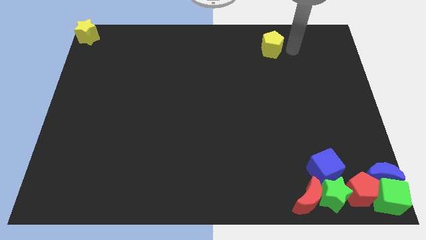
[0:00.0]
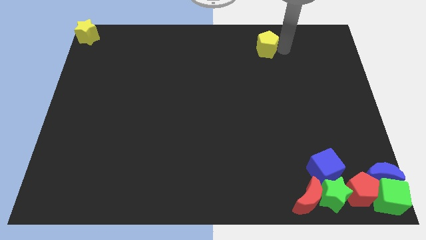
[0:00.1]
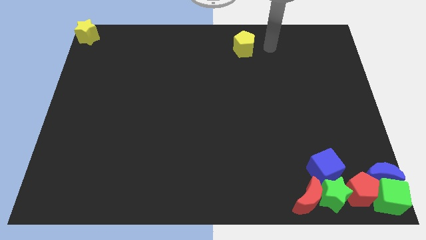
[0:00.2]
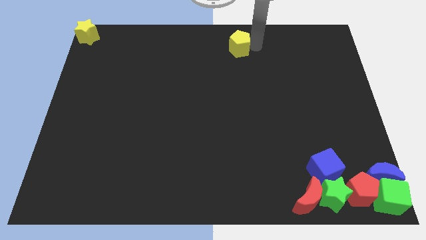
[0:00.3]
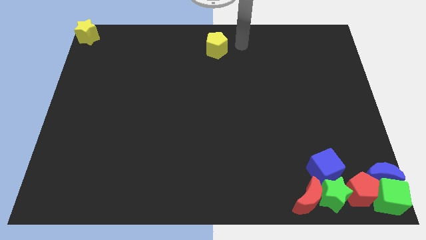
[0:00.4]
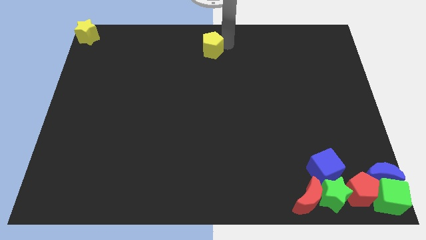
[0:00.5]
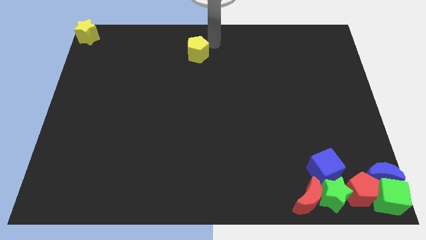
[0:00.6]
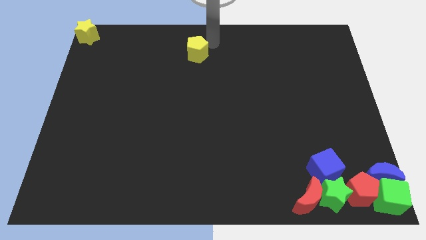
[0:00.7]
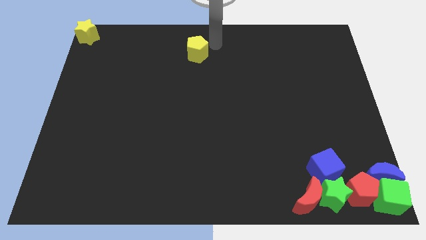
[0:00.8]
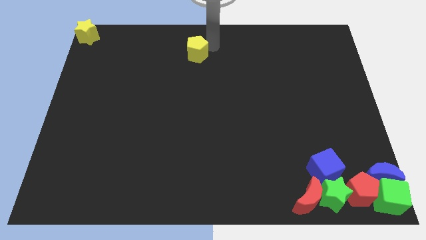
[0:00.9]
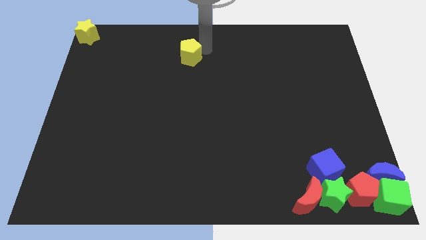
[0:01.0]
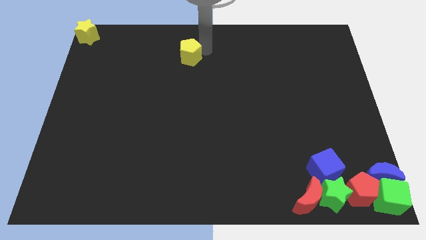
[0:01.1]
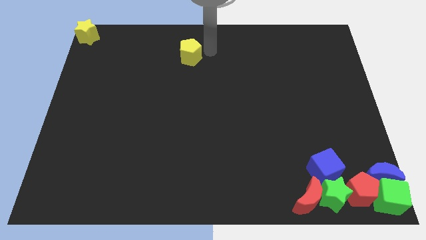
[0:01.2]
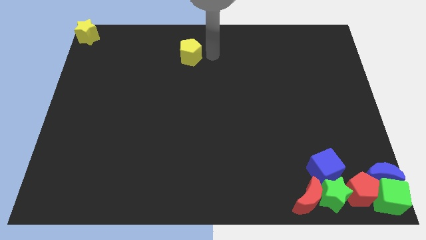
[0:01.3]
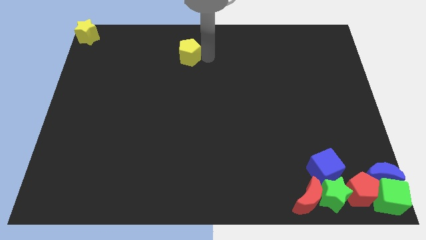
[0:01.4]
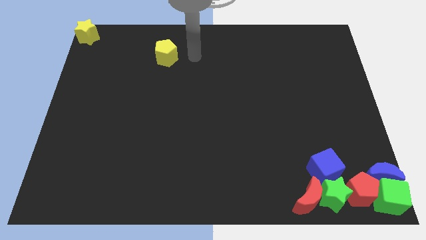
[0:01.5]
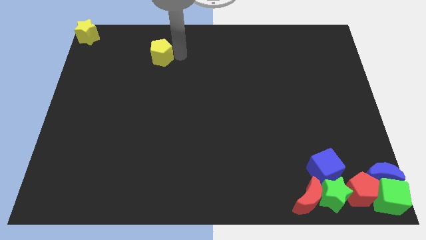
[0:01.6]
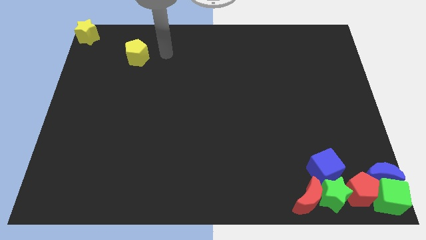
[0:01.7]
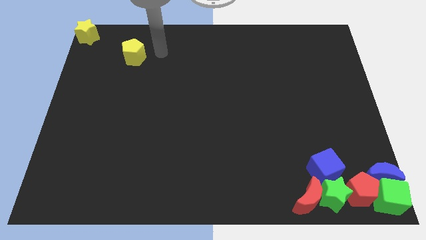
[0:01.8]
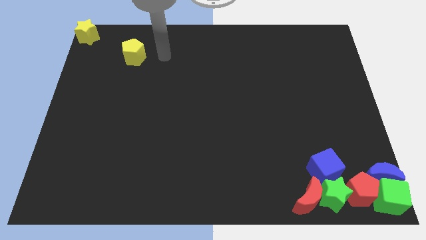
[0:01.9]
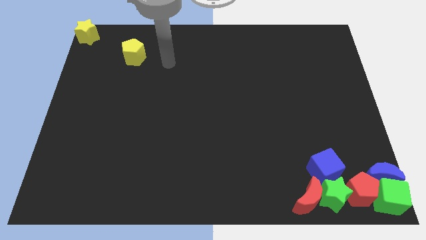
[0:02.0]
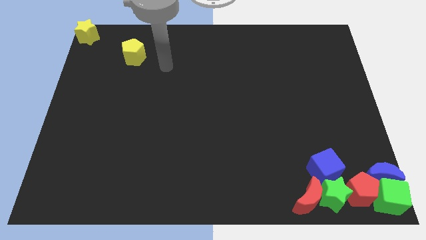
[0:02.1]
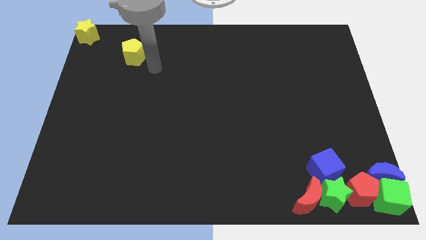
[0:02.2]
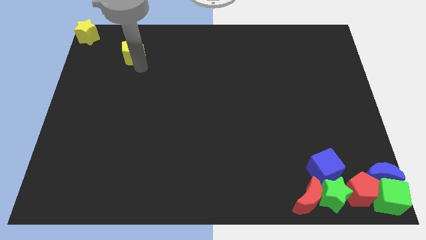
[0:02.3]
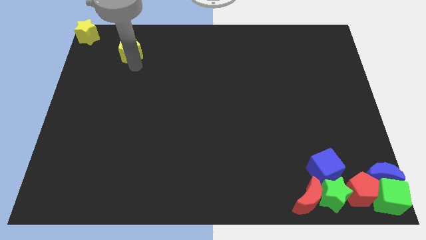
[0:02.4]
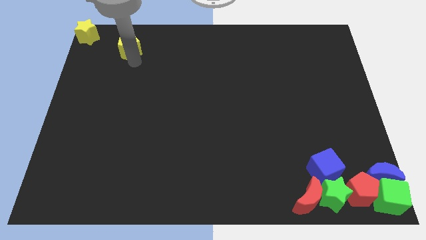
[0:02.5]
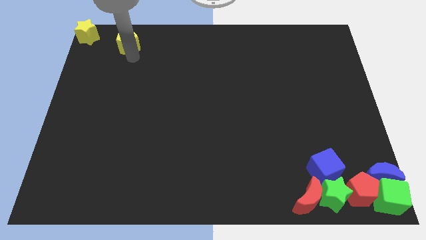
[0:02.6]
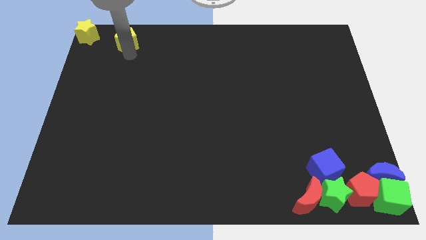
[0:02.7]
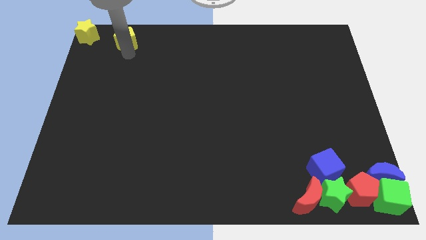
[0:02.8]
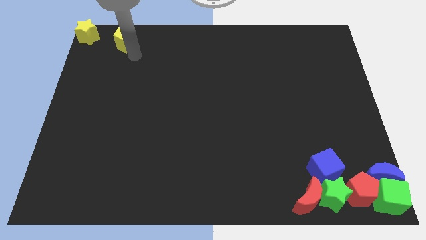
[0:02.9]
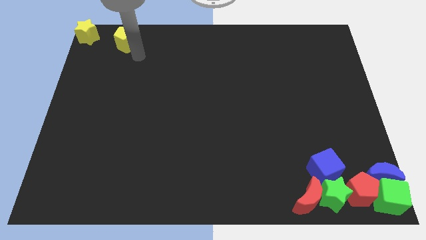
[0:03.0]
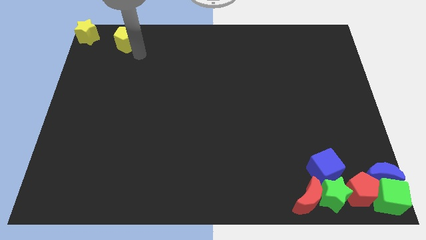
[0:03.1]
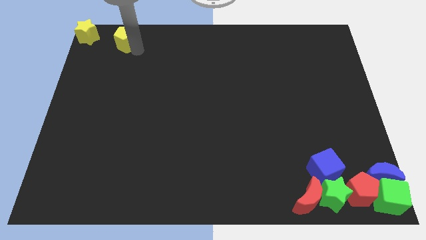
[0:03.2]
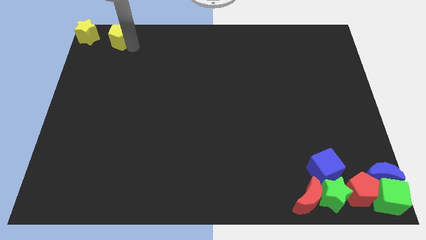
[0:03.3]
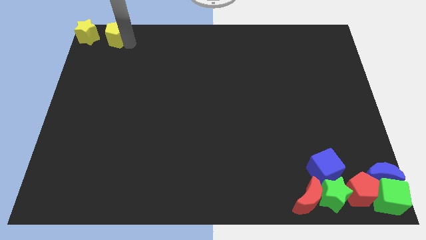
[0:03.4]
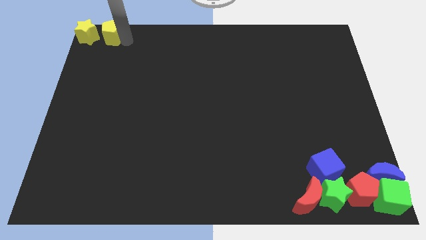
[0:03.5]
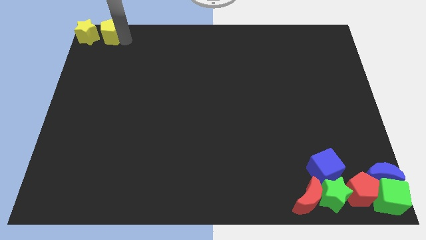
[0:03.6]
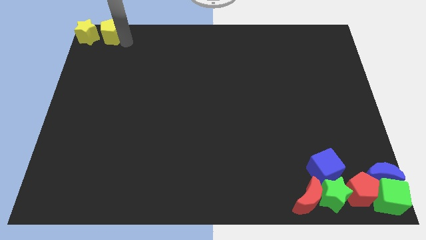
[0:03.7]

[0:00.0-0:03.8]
push the yellow pentagon to the right side of the yellow star

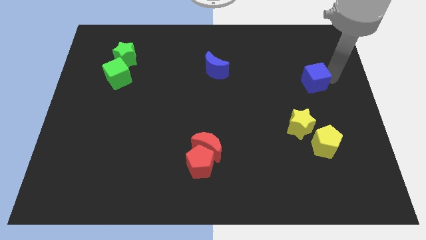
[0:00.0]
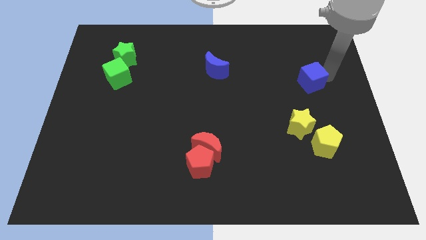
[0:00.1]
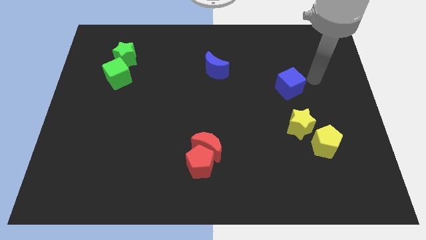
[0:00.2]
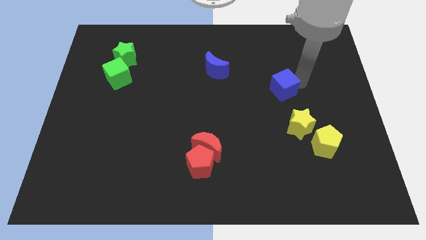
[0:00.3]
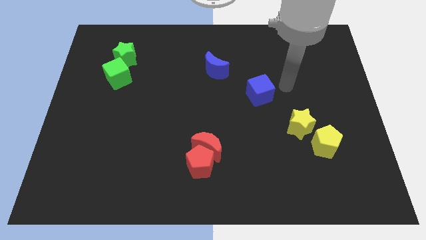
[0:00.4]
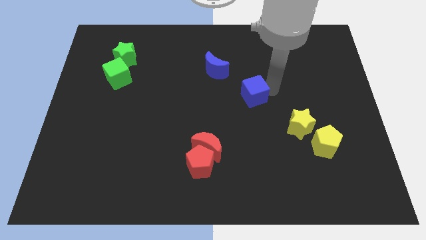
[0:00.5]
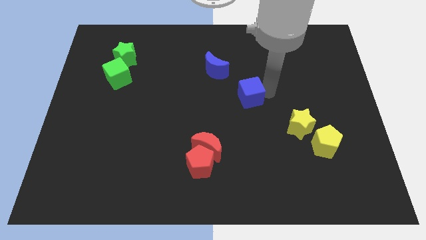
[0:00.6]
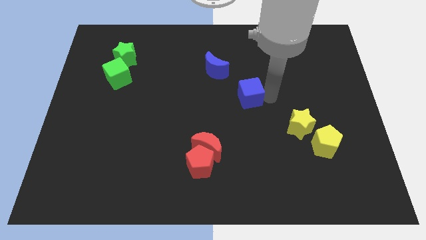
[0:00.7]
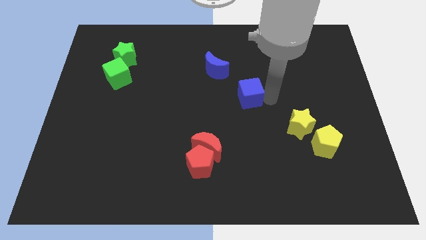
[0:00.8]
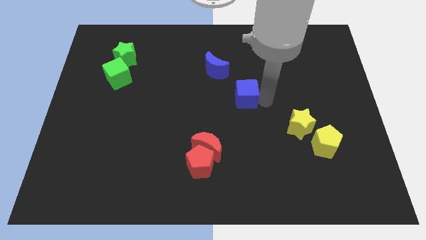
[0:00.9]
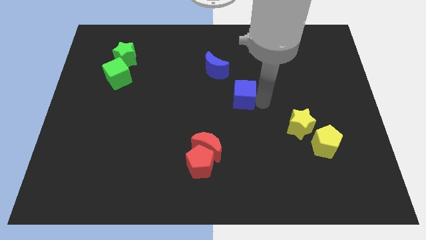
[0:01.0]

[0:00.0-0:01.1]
drag the blue cube slightly to the left

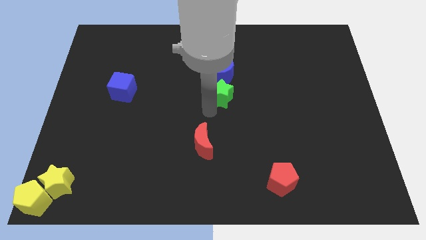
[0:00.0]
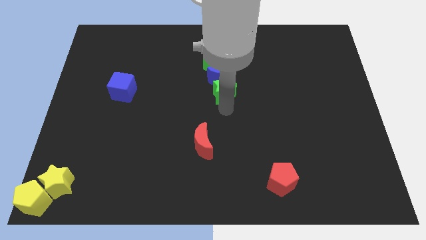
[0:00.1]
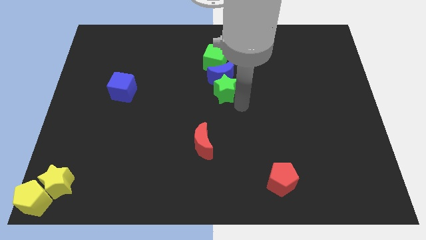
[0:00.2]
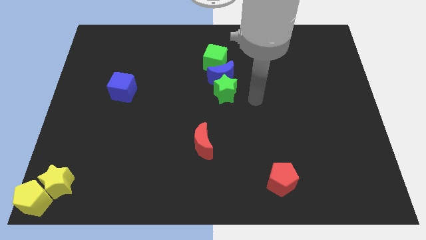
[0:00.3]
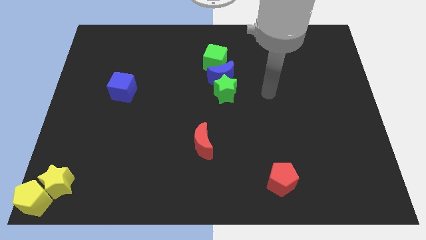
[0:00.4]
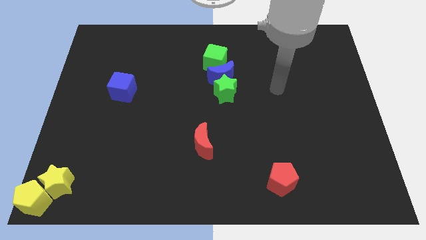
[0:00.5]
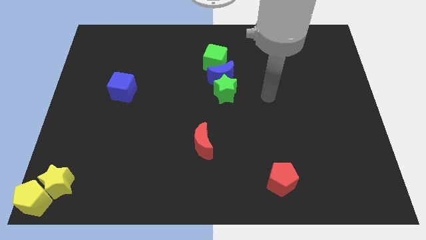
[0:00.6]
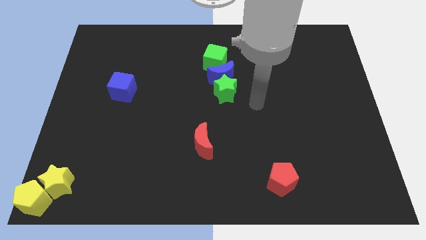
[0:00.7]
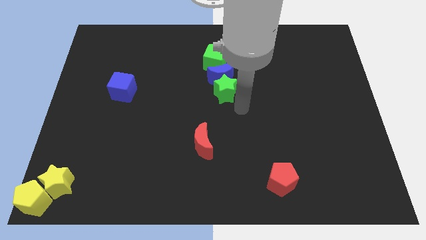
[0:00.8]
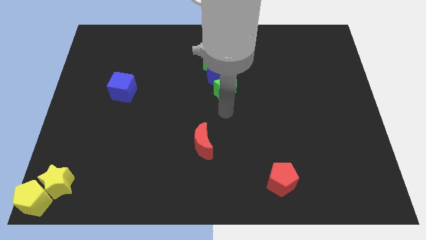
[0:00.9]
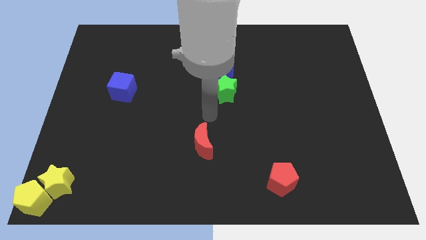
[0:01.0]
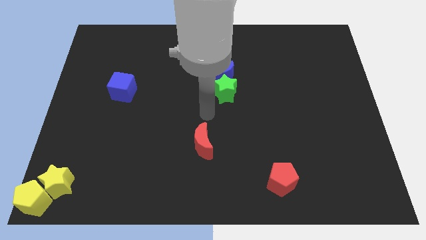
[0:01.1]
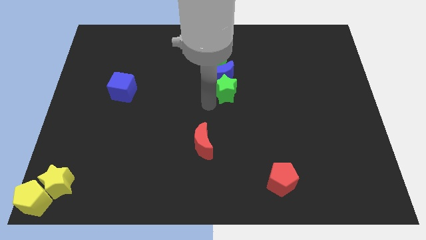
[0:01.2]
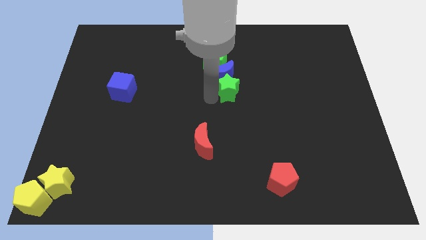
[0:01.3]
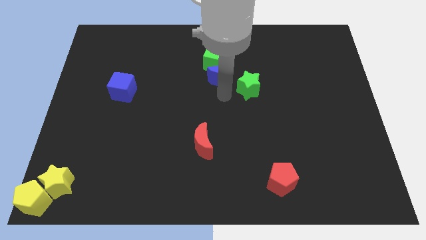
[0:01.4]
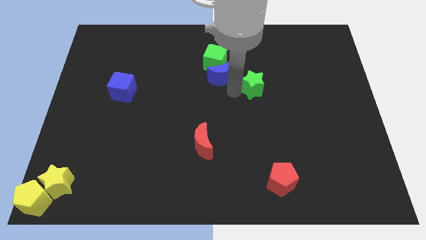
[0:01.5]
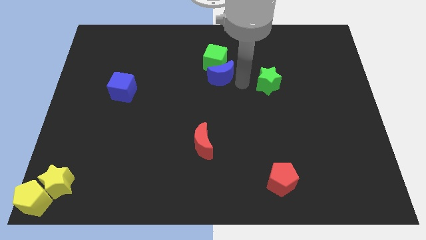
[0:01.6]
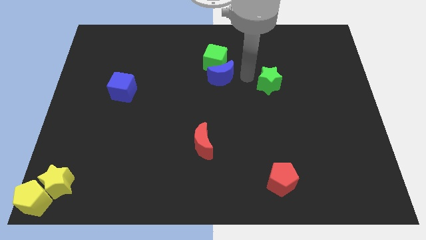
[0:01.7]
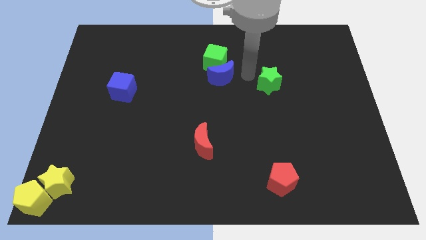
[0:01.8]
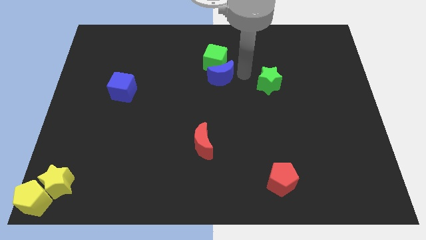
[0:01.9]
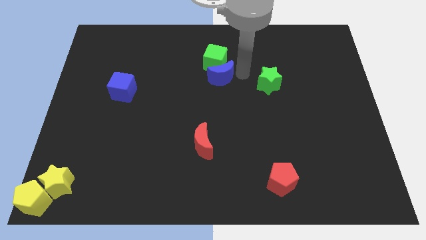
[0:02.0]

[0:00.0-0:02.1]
place the green star to the right of the blue moon

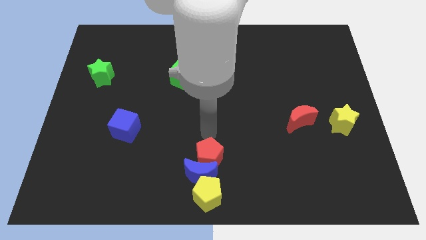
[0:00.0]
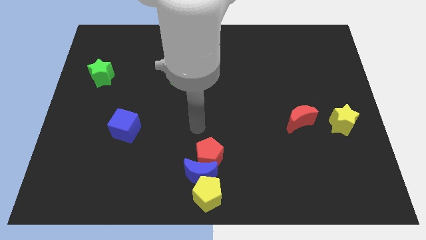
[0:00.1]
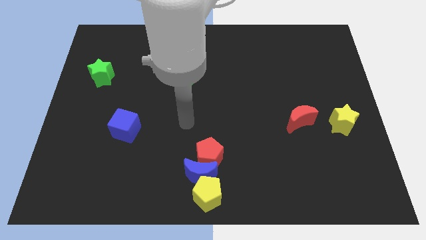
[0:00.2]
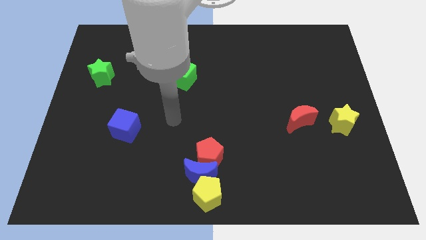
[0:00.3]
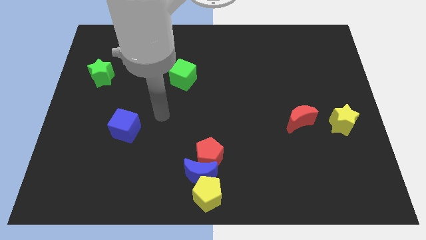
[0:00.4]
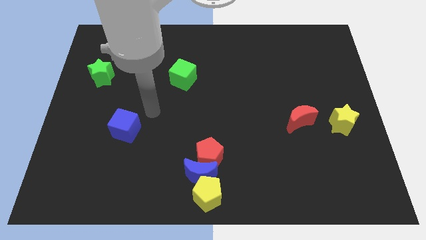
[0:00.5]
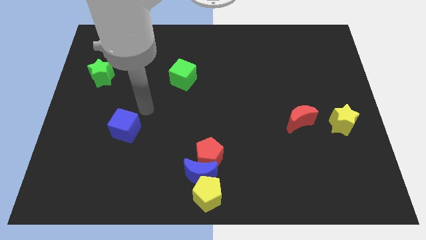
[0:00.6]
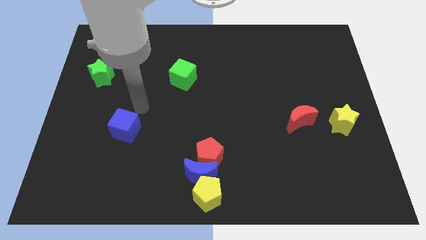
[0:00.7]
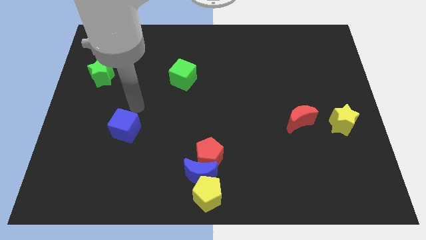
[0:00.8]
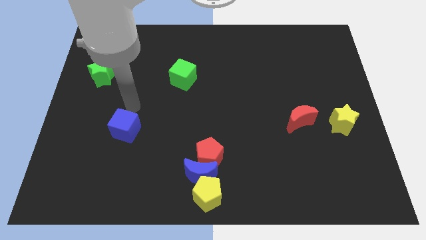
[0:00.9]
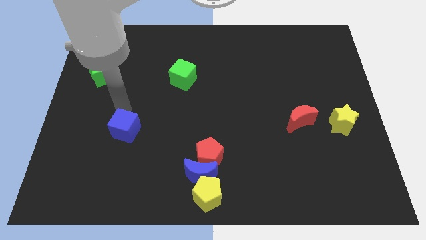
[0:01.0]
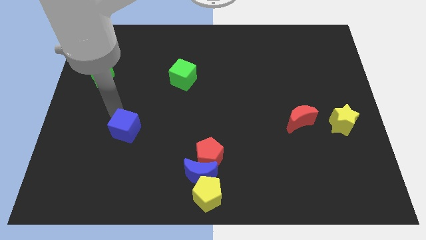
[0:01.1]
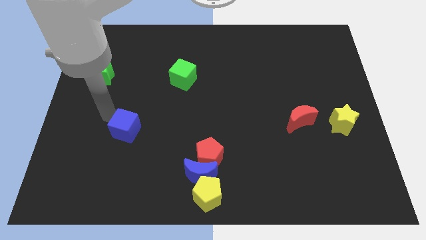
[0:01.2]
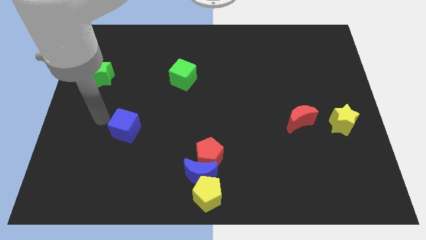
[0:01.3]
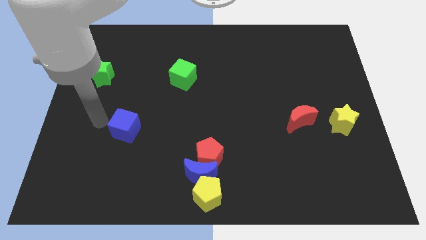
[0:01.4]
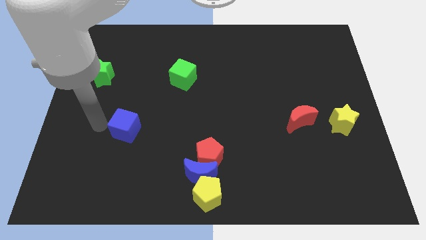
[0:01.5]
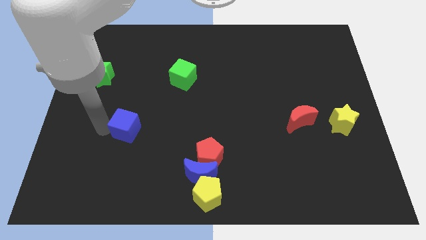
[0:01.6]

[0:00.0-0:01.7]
move your arm to the left of blue crescent

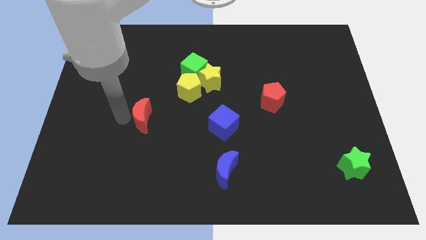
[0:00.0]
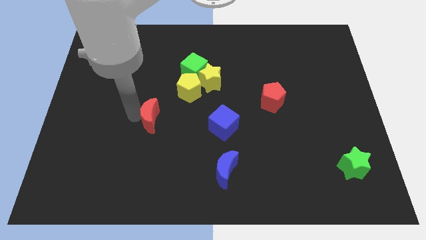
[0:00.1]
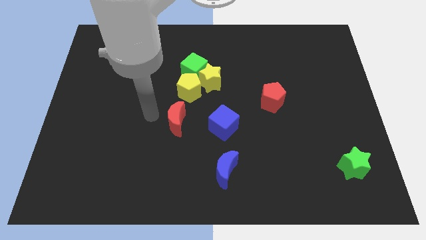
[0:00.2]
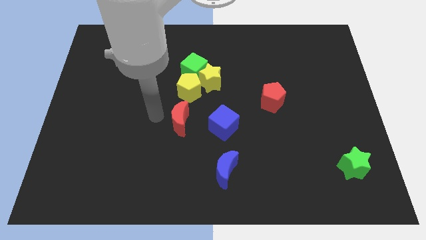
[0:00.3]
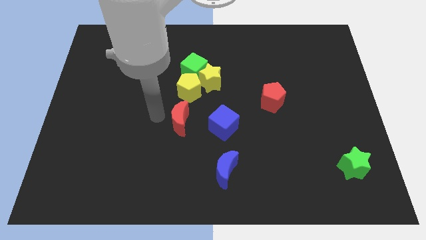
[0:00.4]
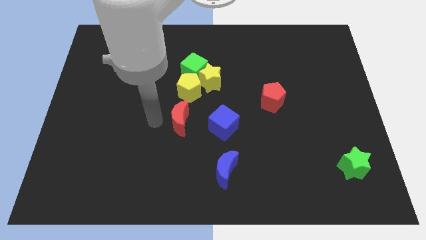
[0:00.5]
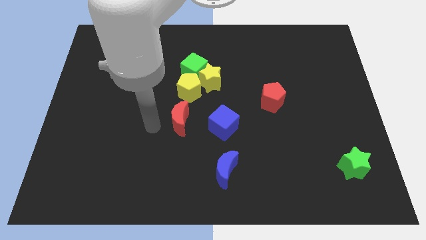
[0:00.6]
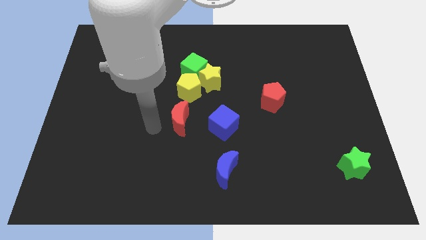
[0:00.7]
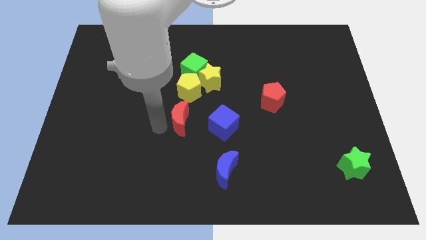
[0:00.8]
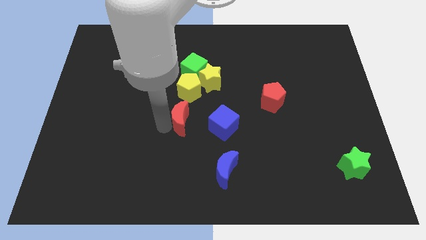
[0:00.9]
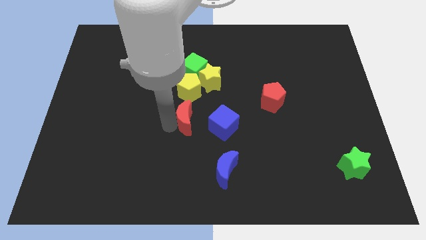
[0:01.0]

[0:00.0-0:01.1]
place the red moon vertically below the yellow pentagon
